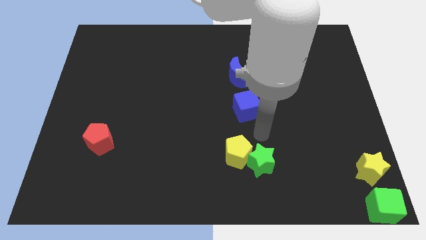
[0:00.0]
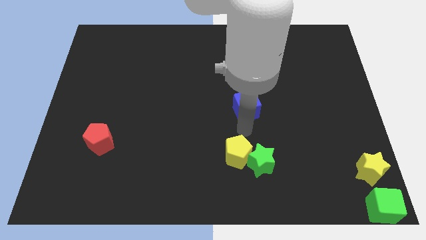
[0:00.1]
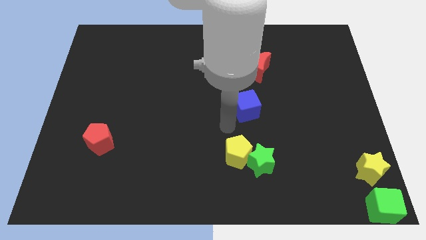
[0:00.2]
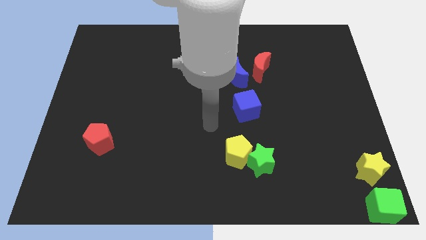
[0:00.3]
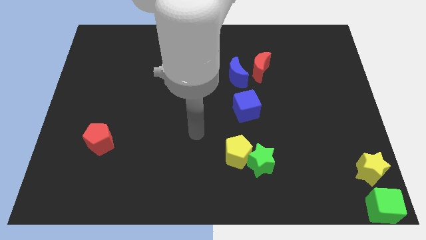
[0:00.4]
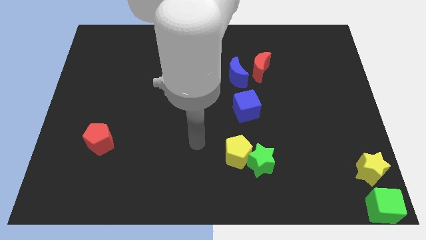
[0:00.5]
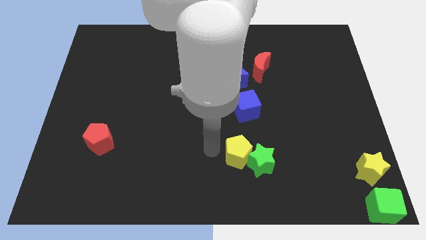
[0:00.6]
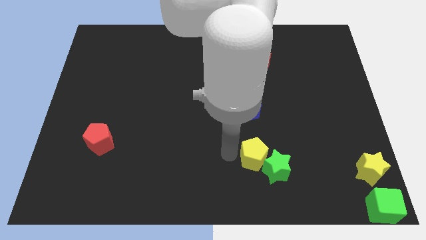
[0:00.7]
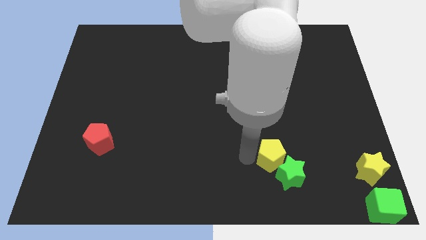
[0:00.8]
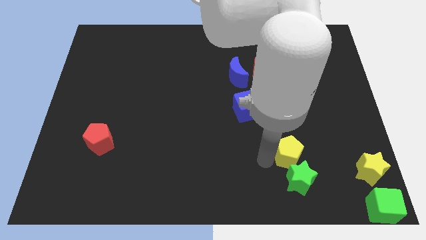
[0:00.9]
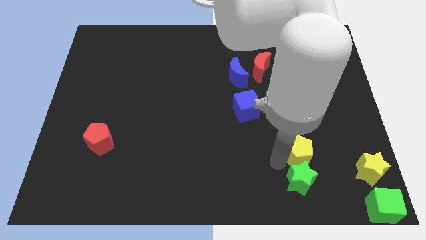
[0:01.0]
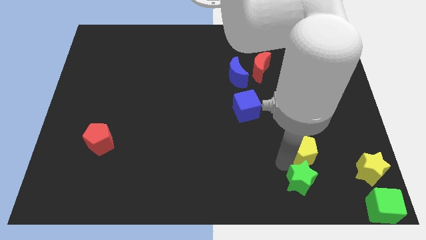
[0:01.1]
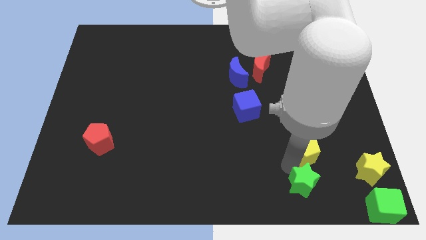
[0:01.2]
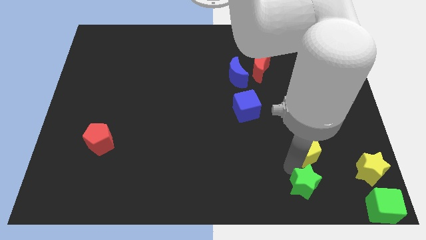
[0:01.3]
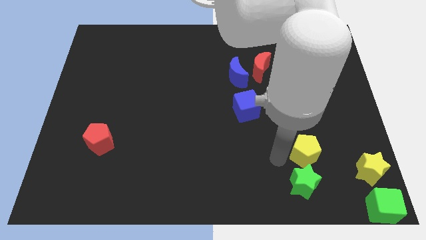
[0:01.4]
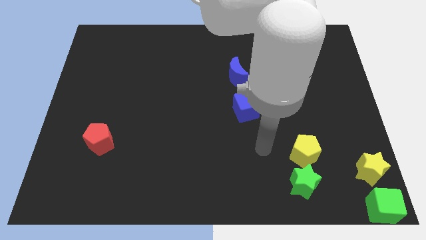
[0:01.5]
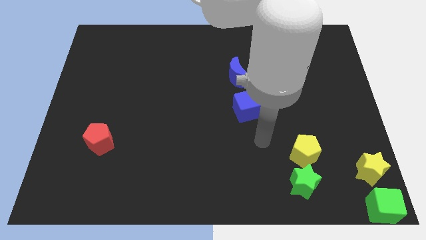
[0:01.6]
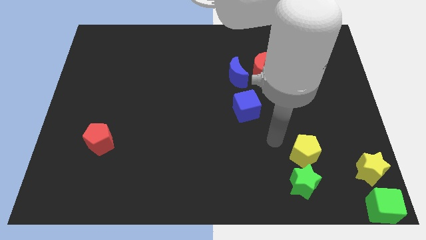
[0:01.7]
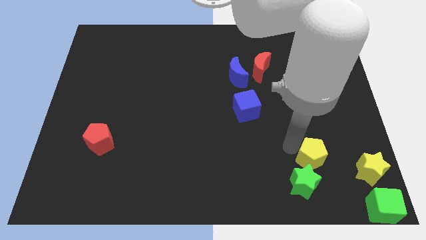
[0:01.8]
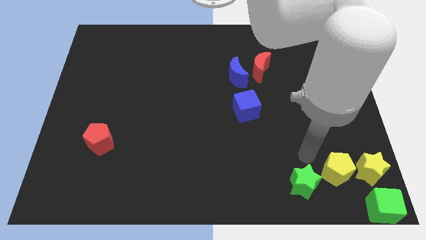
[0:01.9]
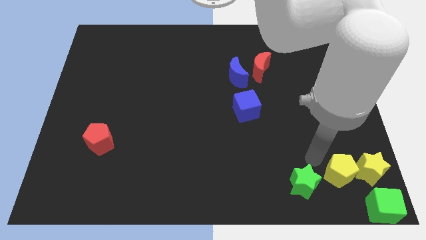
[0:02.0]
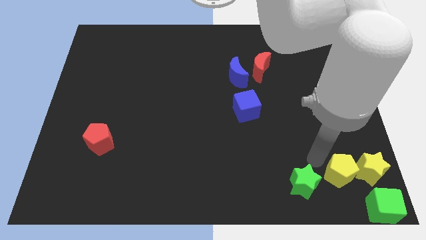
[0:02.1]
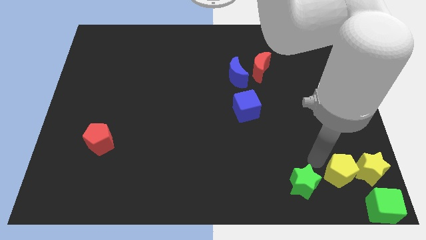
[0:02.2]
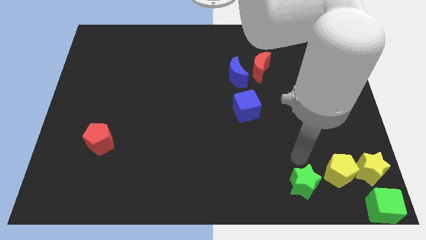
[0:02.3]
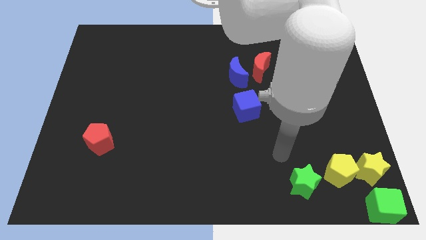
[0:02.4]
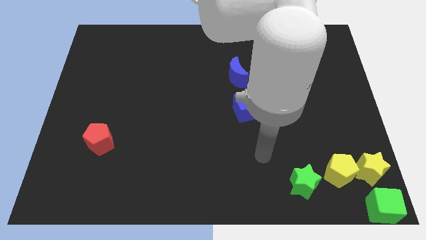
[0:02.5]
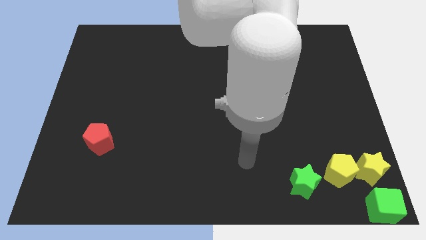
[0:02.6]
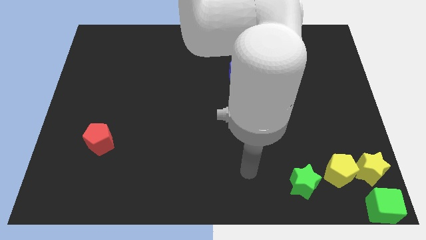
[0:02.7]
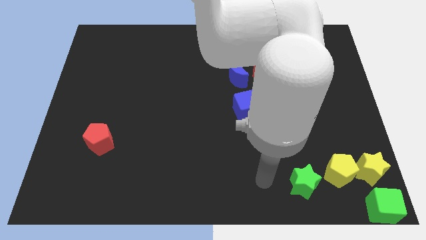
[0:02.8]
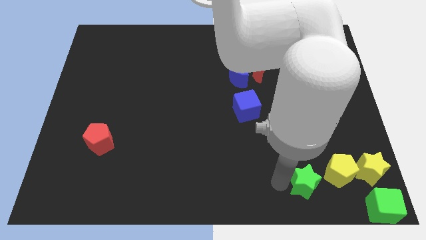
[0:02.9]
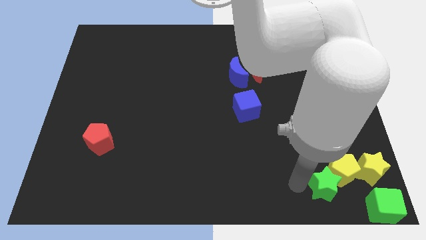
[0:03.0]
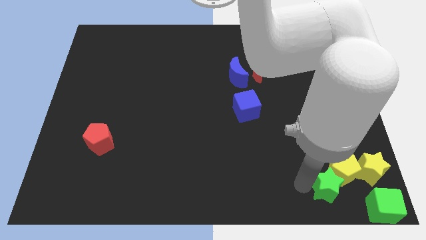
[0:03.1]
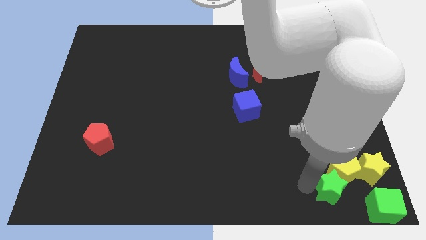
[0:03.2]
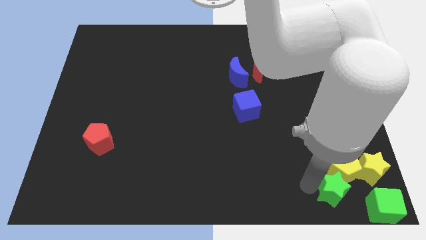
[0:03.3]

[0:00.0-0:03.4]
push green star along with yellow pentagon towards yellow star

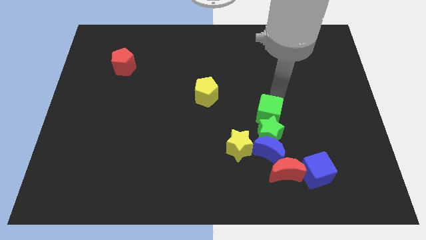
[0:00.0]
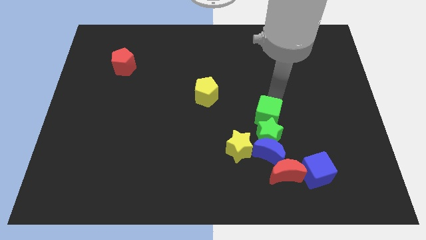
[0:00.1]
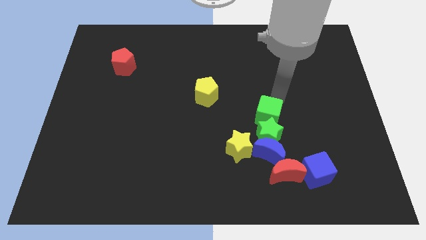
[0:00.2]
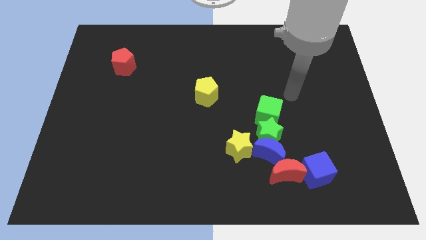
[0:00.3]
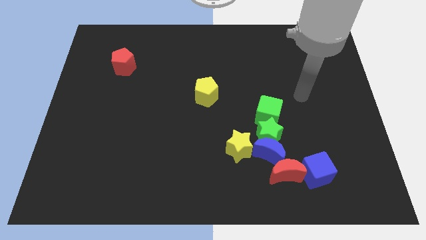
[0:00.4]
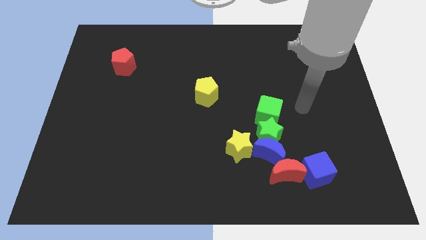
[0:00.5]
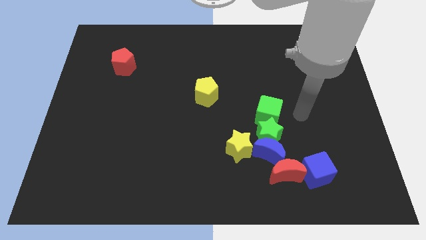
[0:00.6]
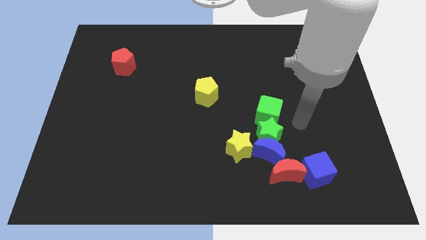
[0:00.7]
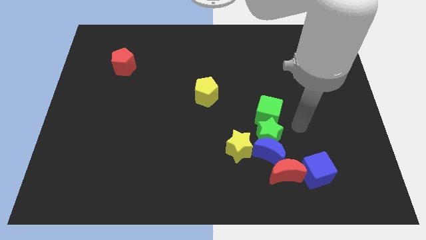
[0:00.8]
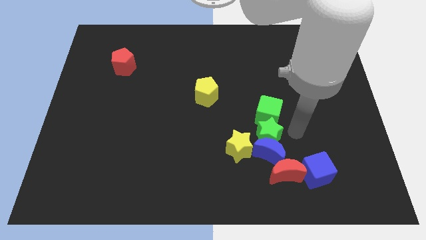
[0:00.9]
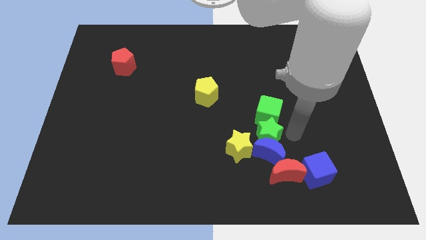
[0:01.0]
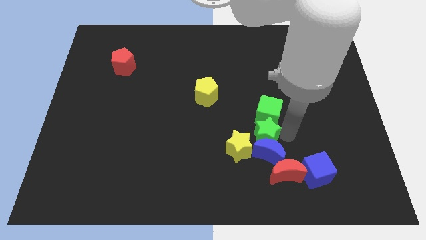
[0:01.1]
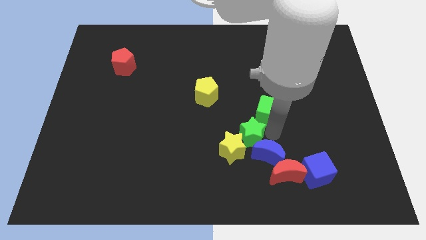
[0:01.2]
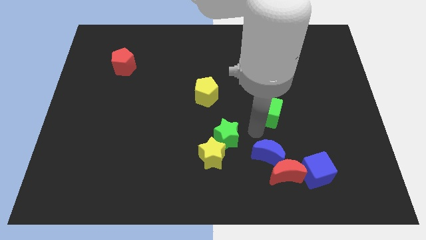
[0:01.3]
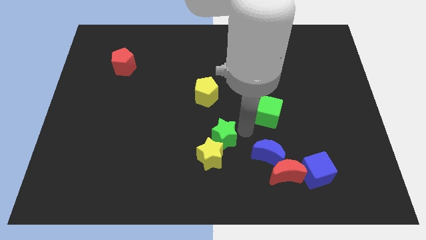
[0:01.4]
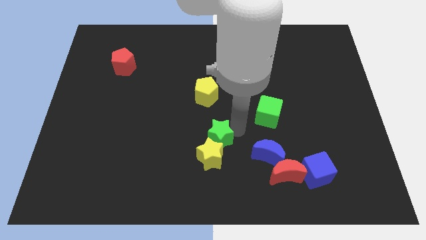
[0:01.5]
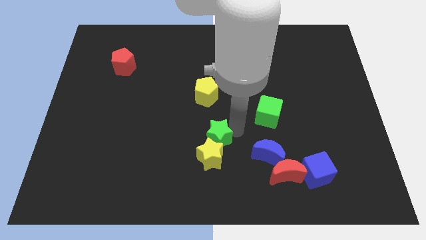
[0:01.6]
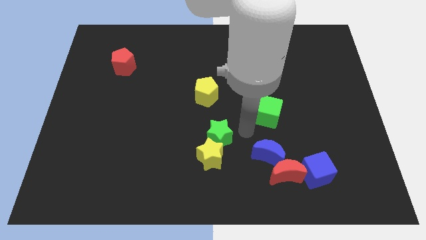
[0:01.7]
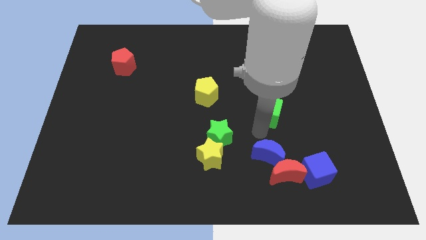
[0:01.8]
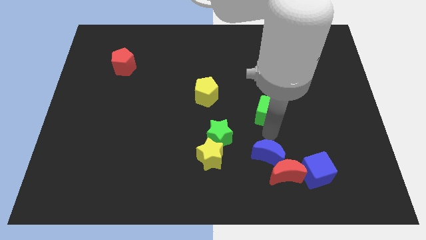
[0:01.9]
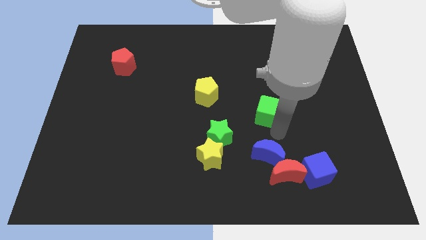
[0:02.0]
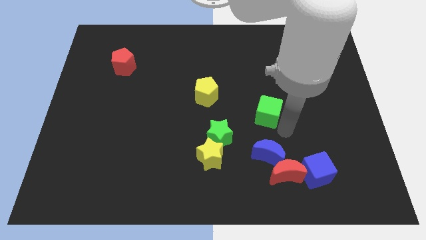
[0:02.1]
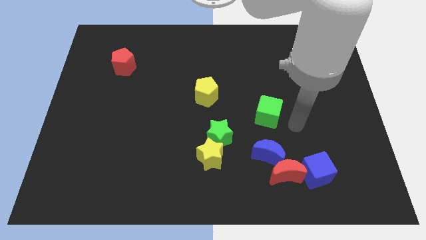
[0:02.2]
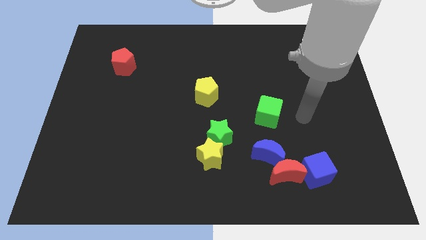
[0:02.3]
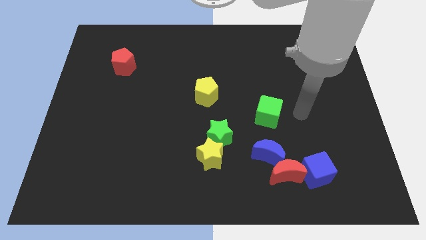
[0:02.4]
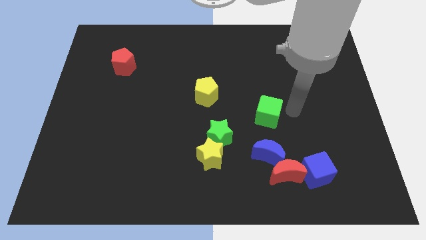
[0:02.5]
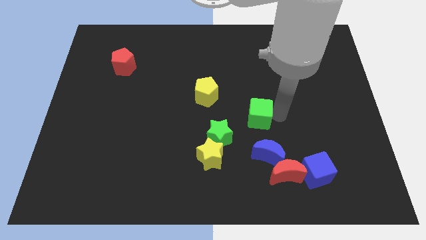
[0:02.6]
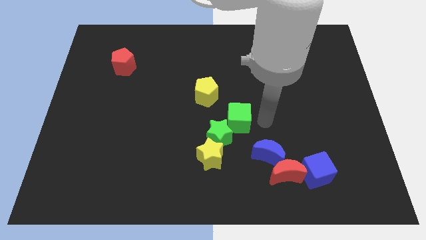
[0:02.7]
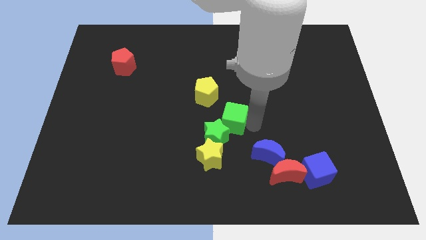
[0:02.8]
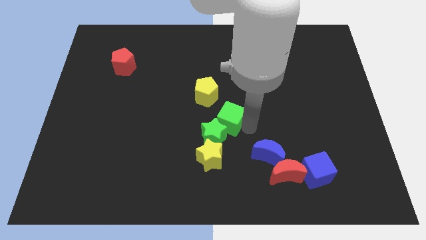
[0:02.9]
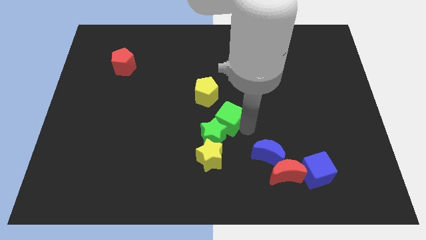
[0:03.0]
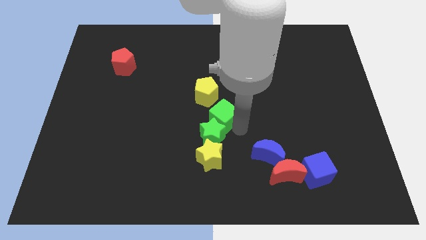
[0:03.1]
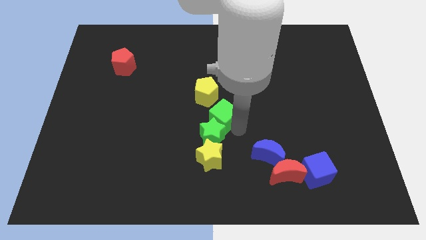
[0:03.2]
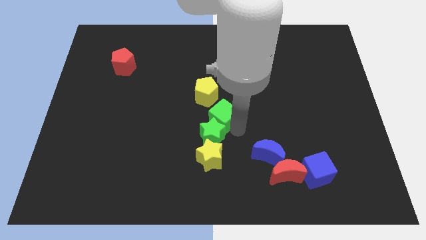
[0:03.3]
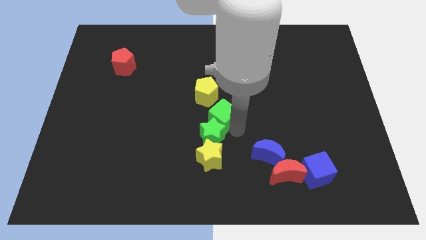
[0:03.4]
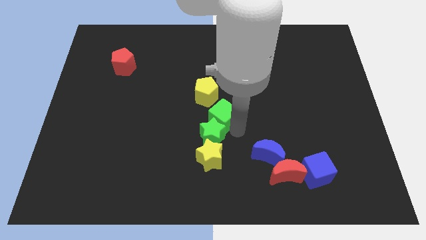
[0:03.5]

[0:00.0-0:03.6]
move the green blocks into the top side of the yellow star

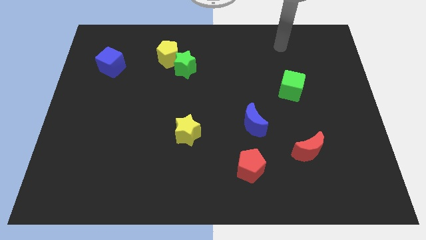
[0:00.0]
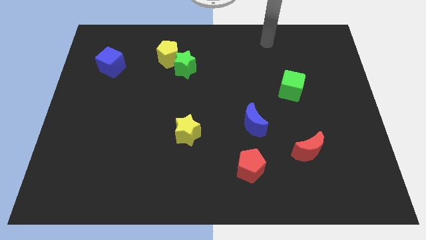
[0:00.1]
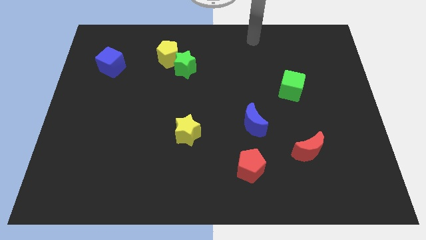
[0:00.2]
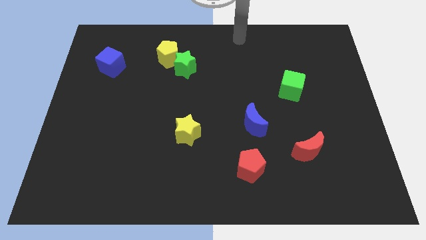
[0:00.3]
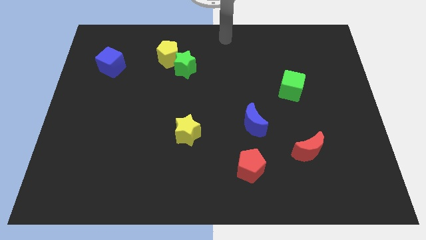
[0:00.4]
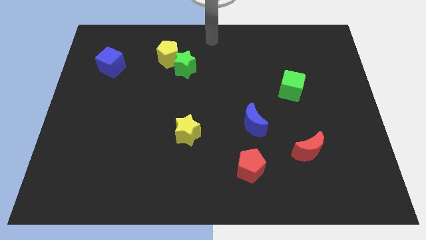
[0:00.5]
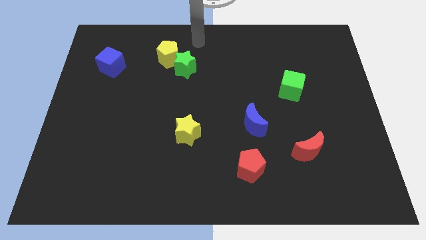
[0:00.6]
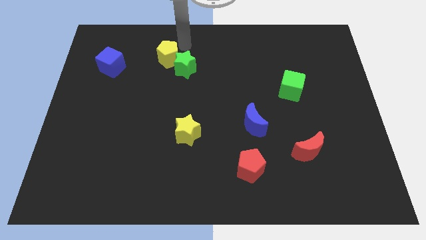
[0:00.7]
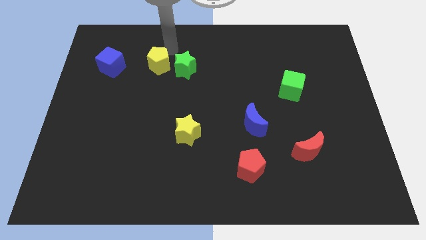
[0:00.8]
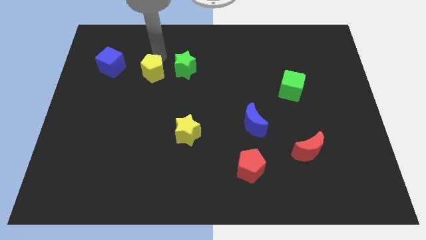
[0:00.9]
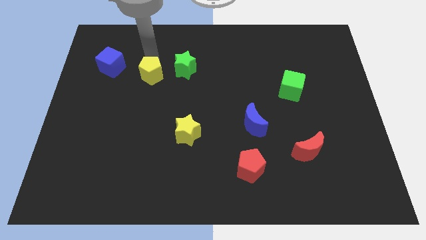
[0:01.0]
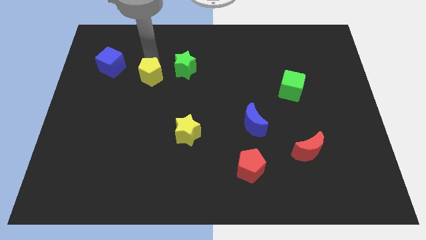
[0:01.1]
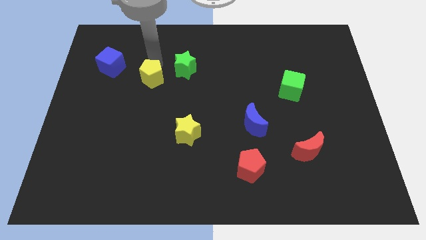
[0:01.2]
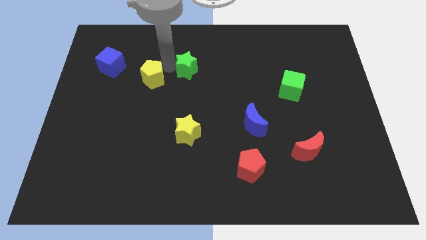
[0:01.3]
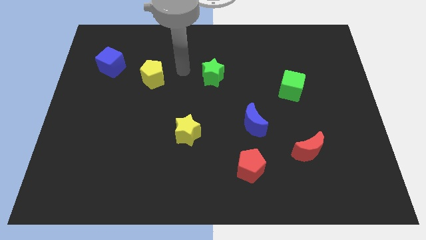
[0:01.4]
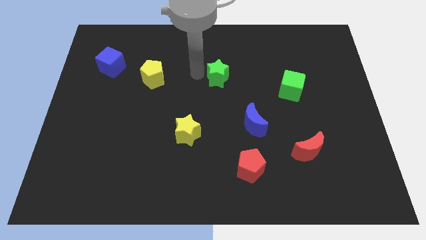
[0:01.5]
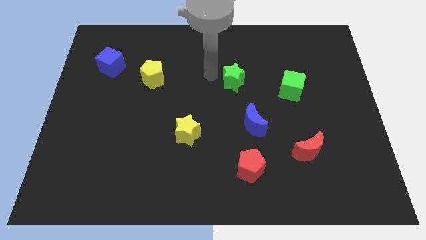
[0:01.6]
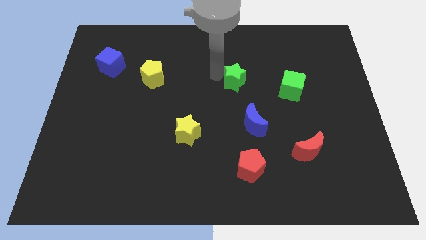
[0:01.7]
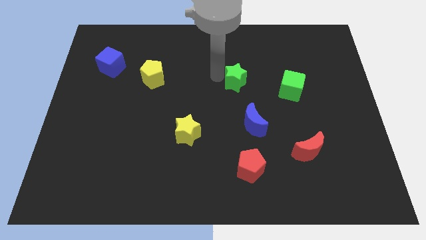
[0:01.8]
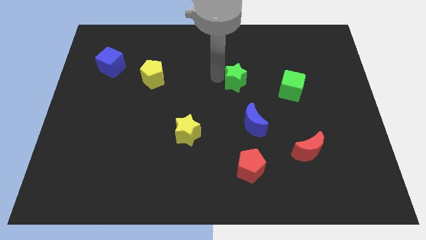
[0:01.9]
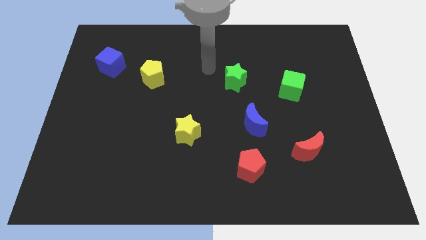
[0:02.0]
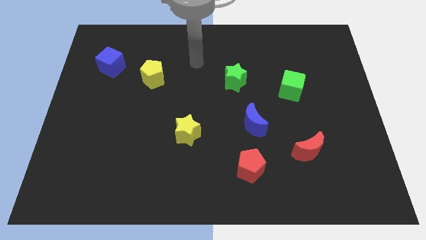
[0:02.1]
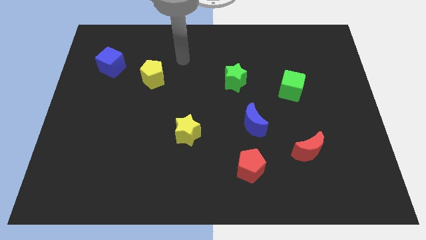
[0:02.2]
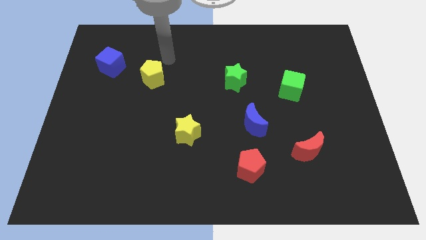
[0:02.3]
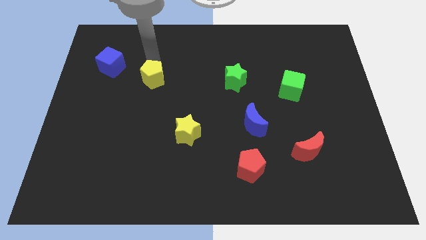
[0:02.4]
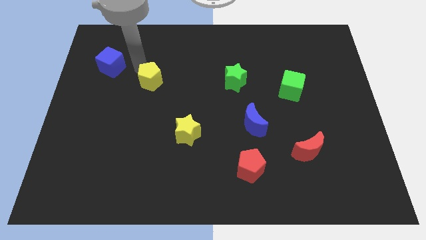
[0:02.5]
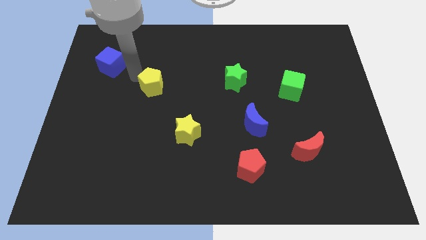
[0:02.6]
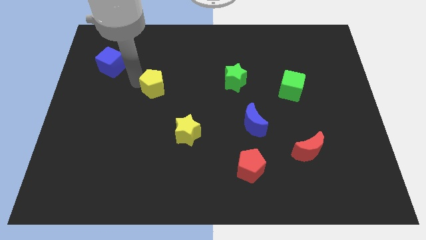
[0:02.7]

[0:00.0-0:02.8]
separate the green star and the yellow pentagon
